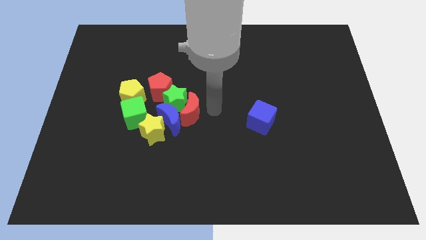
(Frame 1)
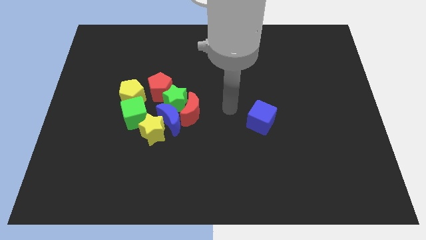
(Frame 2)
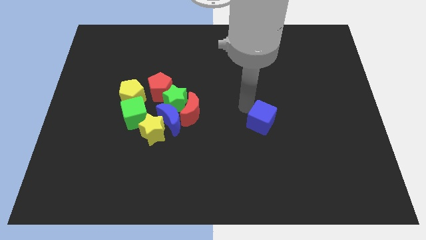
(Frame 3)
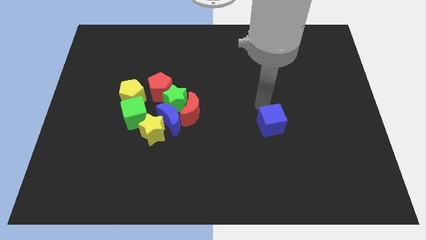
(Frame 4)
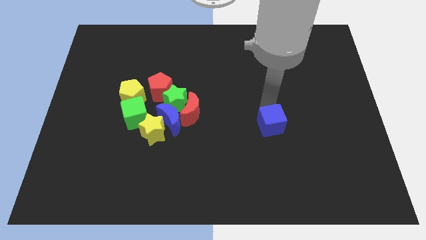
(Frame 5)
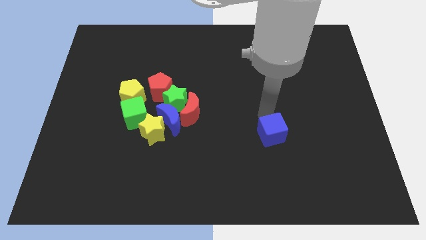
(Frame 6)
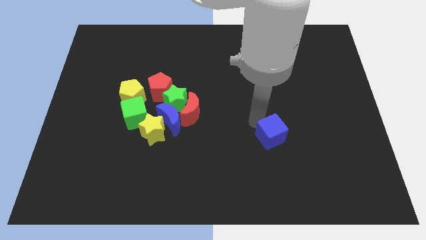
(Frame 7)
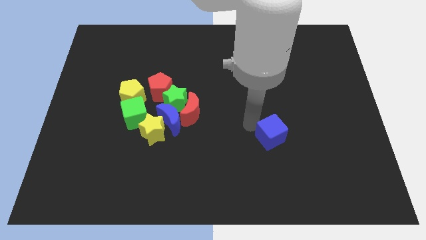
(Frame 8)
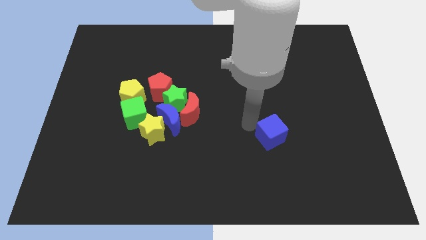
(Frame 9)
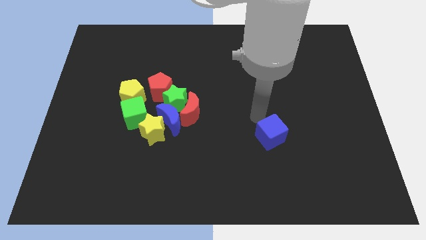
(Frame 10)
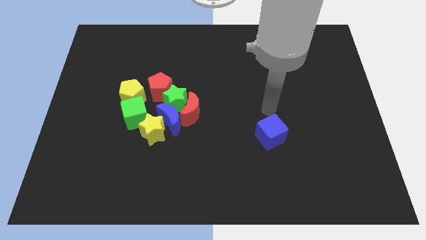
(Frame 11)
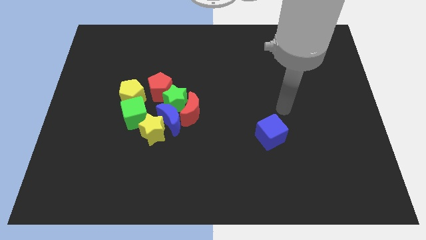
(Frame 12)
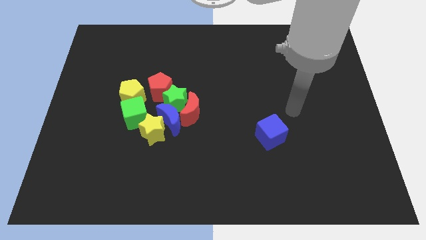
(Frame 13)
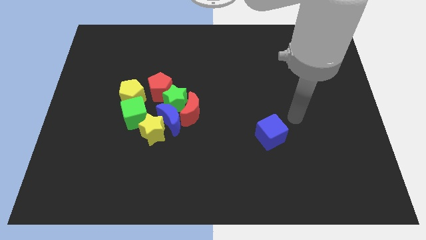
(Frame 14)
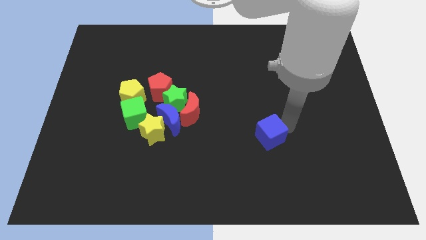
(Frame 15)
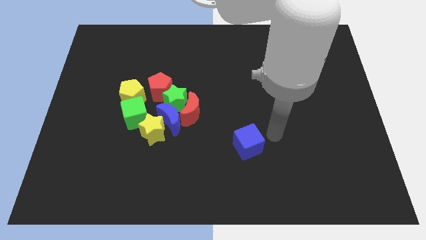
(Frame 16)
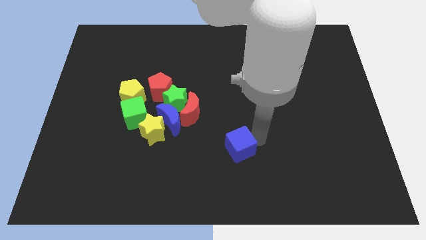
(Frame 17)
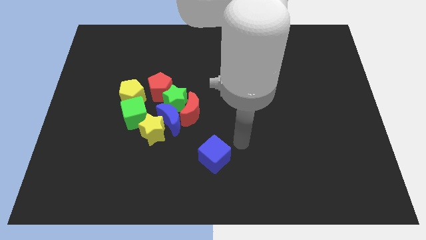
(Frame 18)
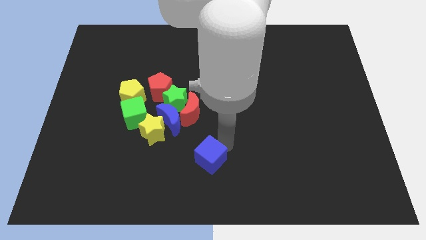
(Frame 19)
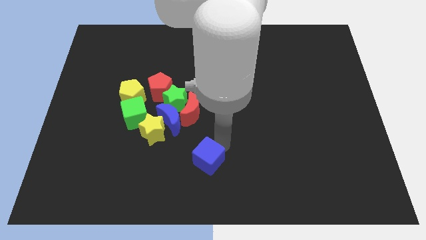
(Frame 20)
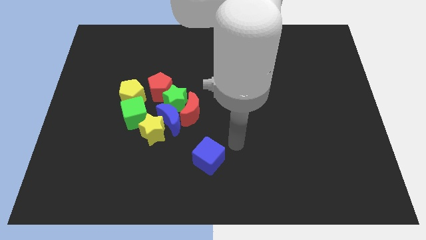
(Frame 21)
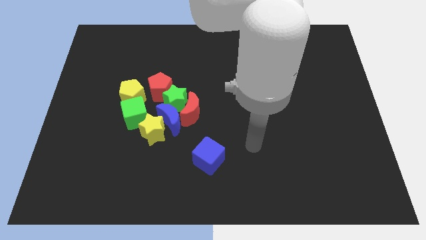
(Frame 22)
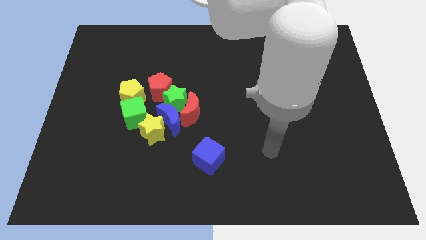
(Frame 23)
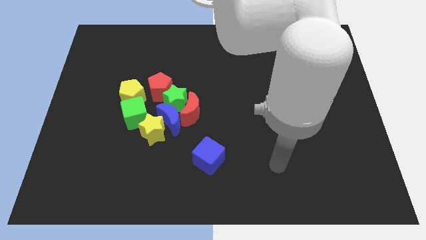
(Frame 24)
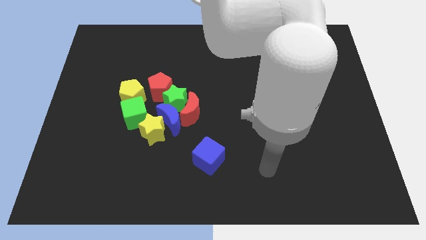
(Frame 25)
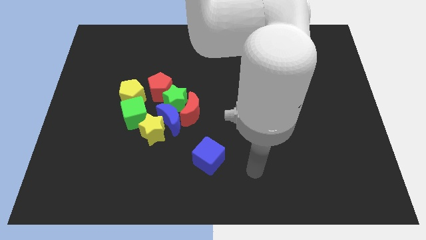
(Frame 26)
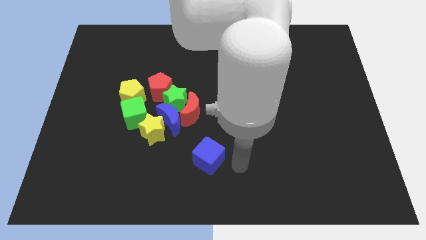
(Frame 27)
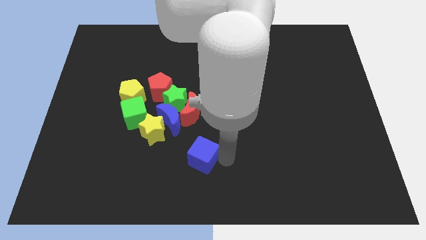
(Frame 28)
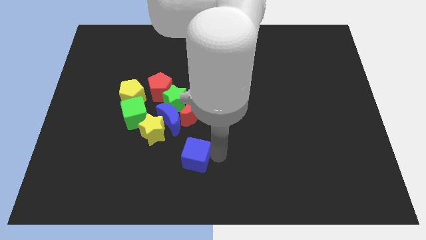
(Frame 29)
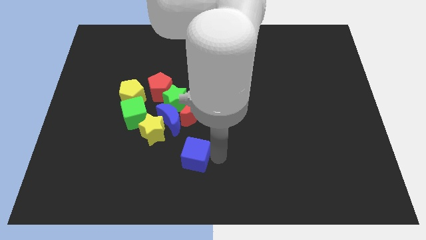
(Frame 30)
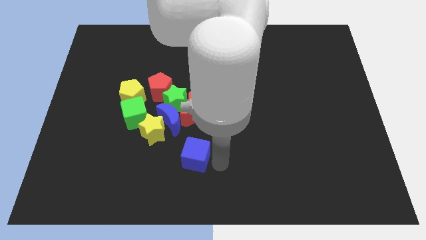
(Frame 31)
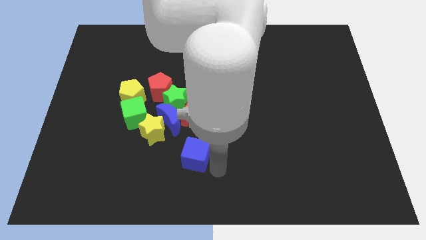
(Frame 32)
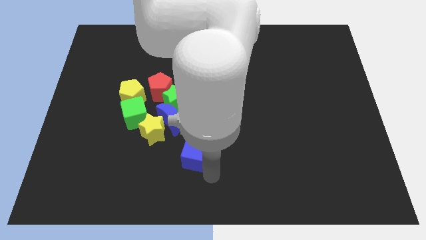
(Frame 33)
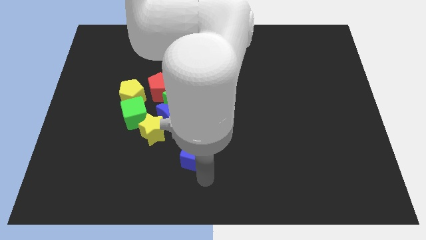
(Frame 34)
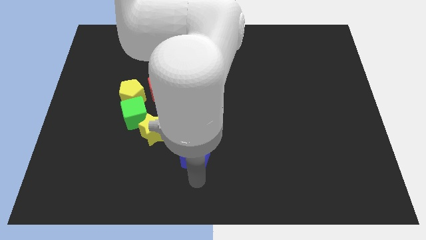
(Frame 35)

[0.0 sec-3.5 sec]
slide the blue cube towards the group of blocks

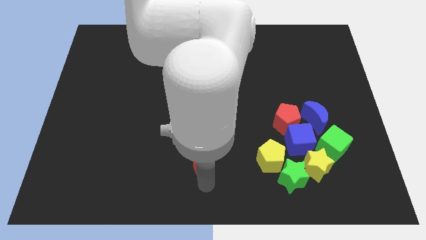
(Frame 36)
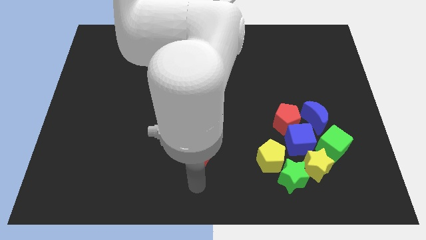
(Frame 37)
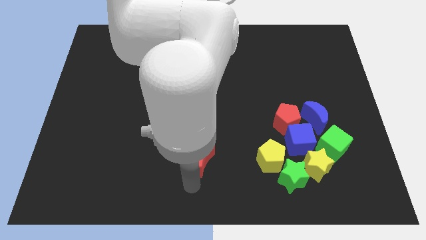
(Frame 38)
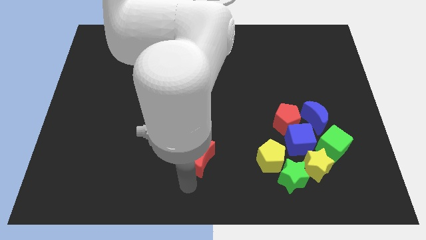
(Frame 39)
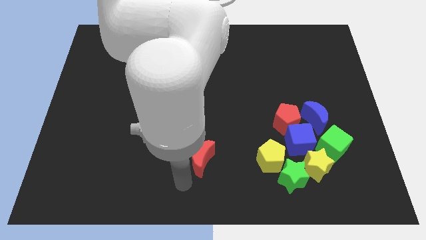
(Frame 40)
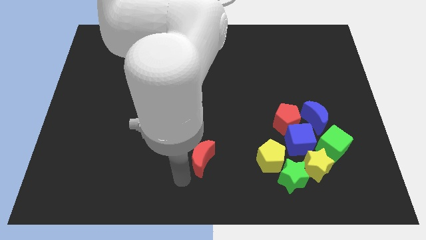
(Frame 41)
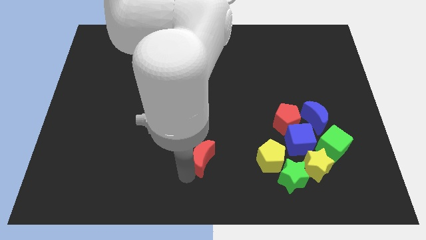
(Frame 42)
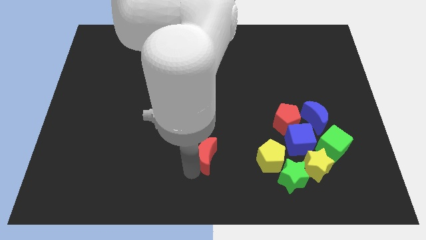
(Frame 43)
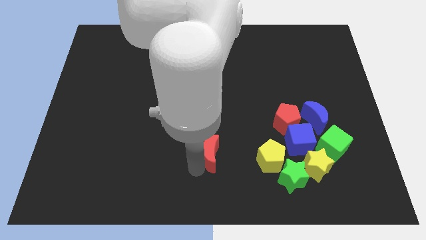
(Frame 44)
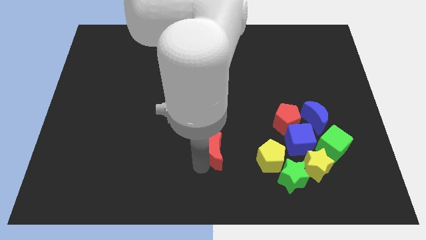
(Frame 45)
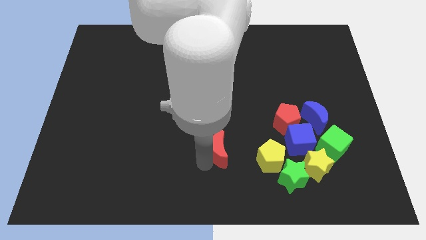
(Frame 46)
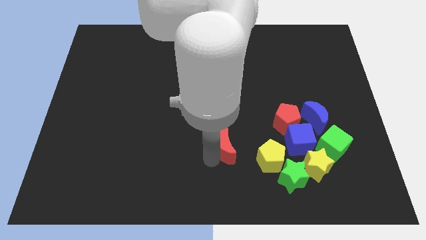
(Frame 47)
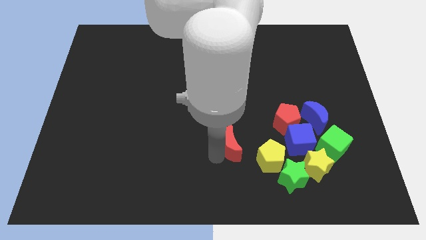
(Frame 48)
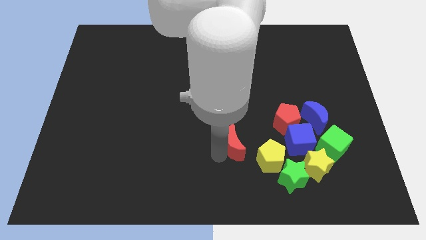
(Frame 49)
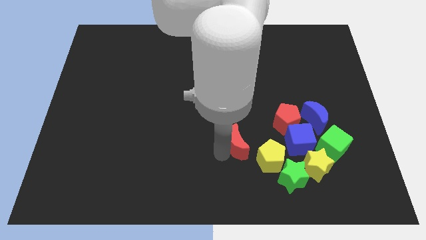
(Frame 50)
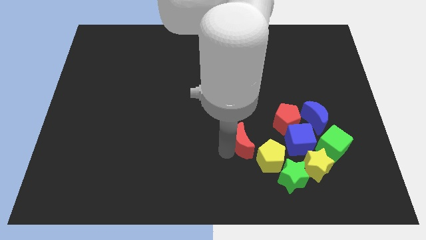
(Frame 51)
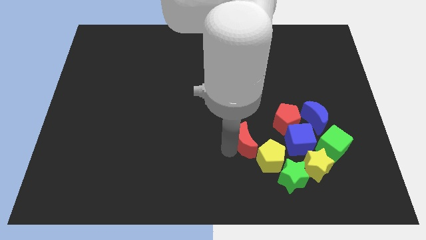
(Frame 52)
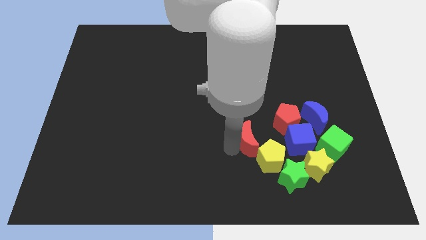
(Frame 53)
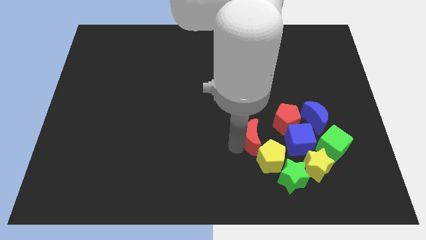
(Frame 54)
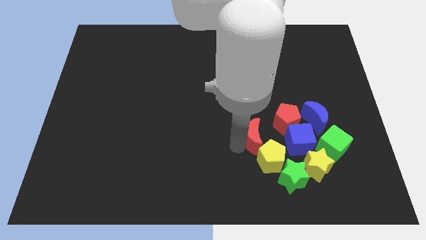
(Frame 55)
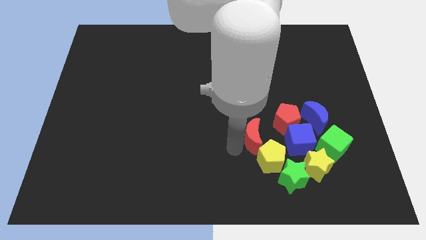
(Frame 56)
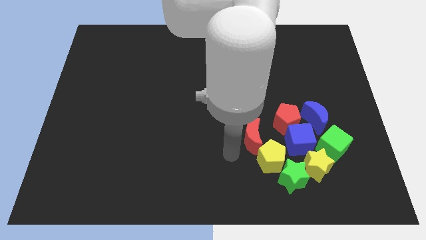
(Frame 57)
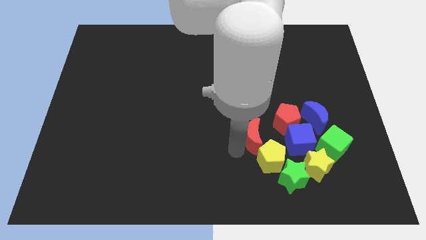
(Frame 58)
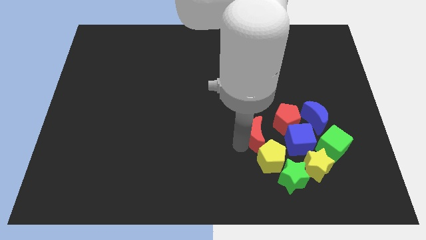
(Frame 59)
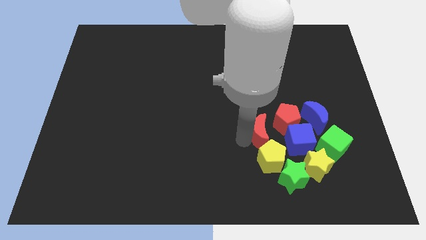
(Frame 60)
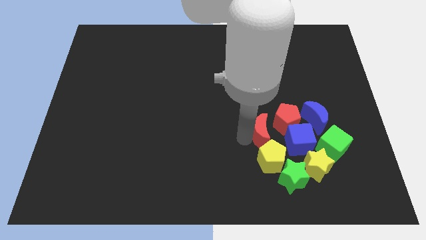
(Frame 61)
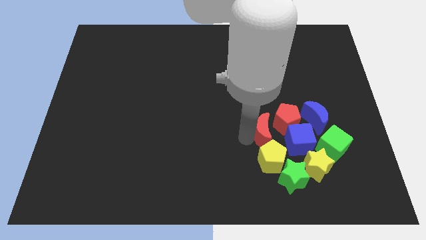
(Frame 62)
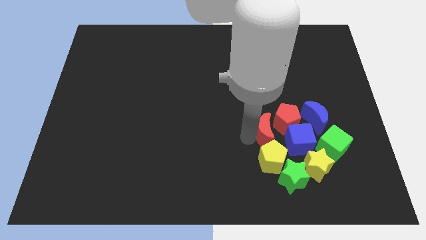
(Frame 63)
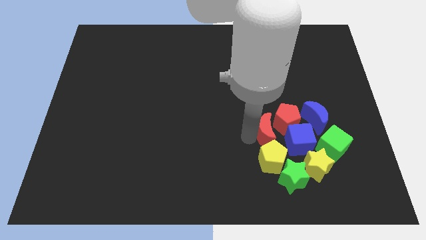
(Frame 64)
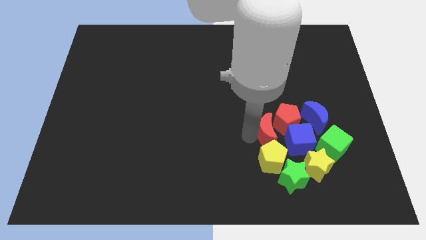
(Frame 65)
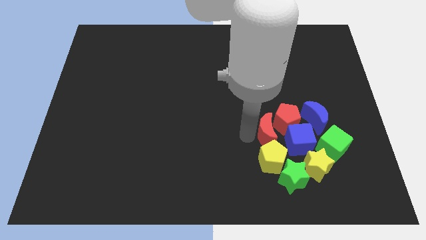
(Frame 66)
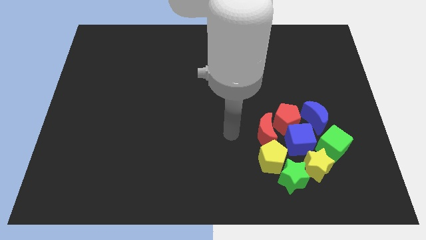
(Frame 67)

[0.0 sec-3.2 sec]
move the red moon to the top of yellow pentagon

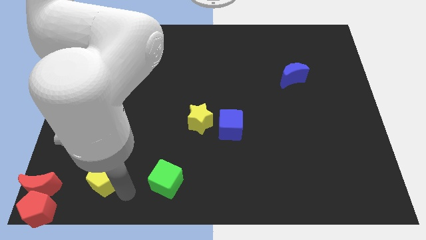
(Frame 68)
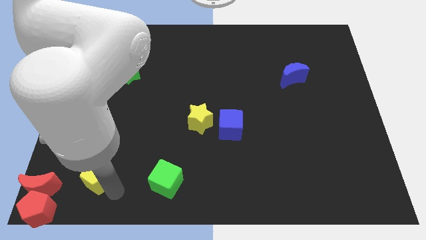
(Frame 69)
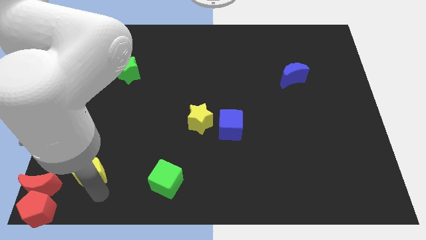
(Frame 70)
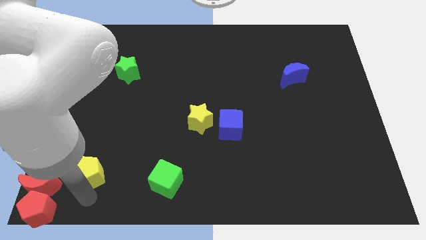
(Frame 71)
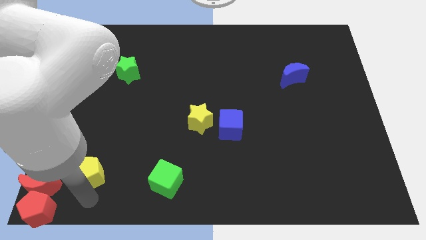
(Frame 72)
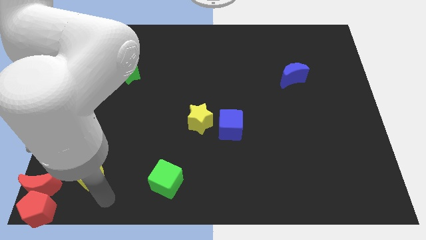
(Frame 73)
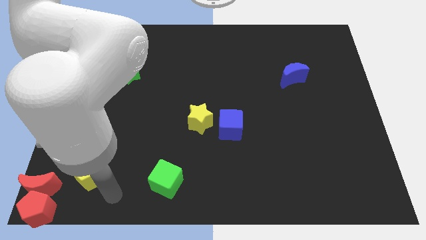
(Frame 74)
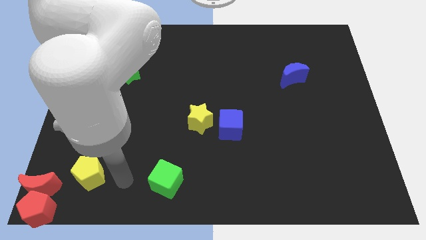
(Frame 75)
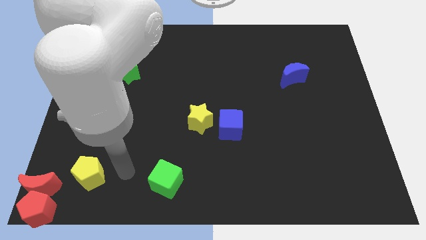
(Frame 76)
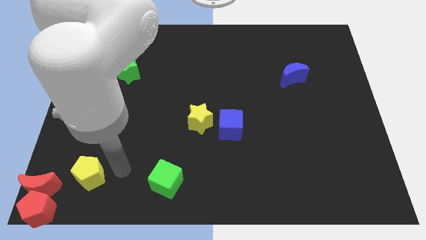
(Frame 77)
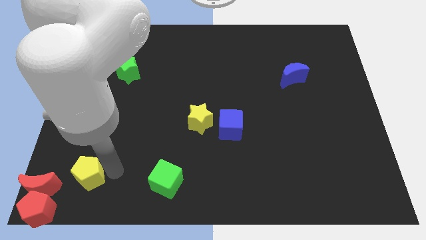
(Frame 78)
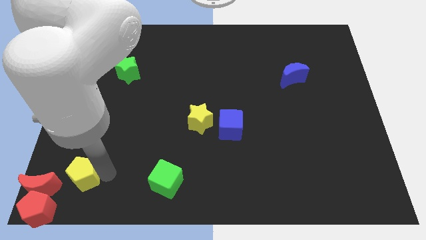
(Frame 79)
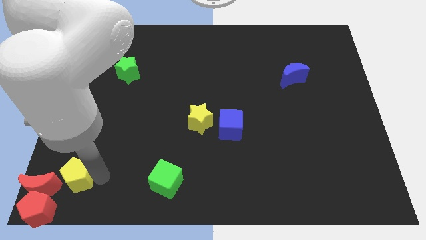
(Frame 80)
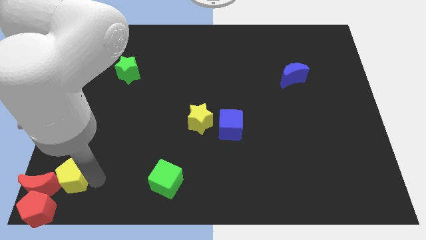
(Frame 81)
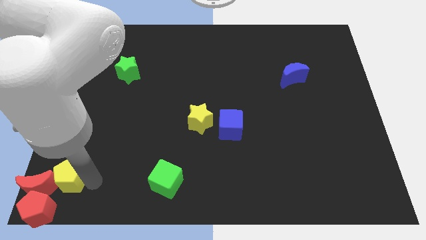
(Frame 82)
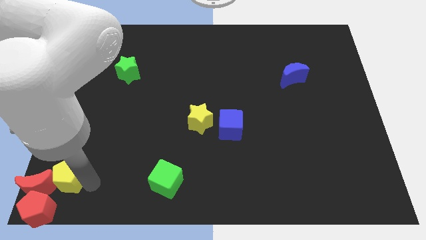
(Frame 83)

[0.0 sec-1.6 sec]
push the yellow pentagon into red moon

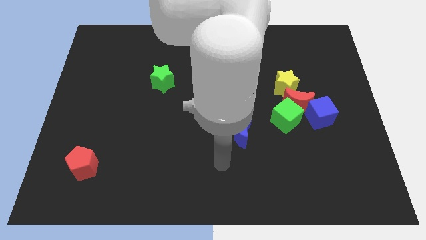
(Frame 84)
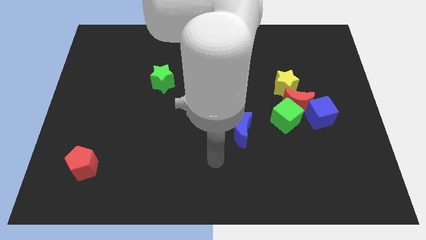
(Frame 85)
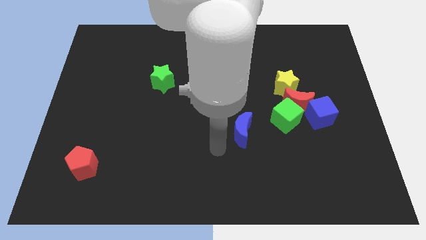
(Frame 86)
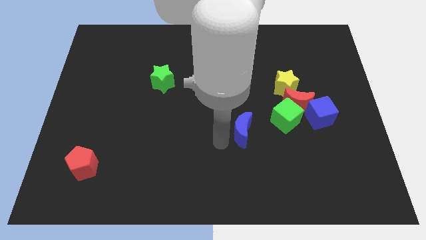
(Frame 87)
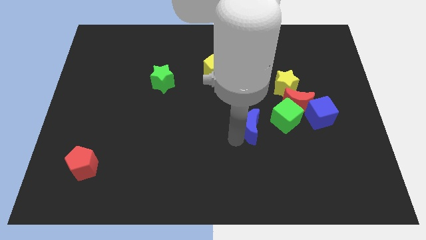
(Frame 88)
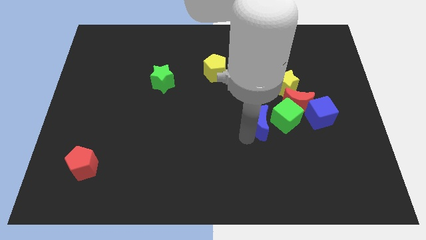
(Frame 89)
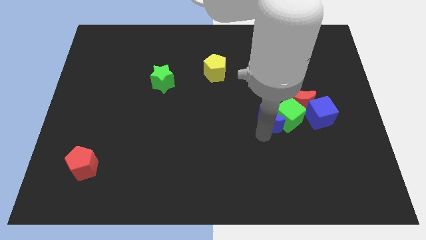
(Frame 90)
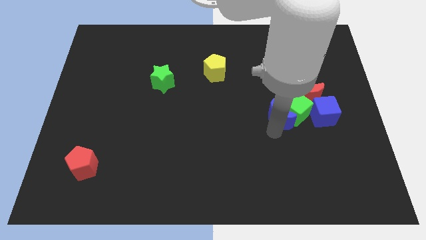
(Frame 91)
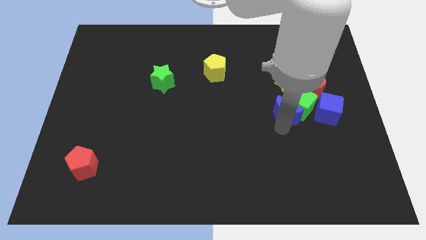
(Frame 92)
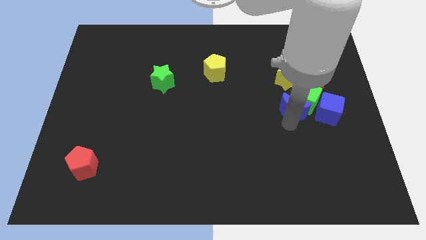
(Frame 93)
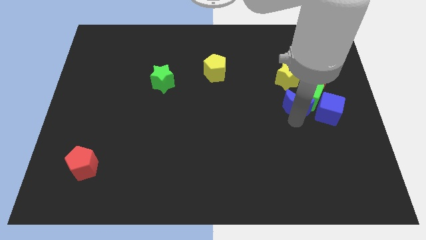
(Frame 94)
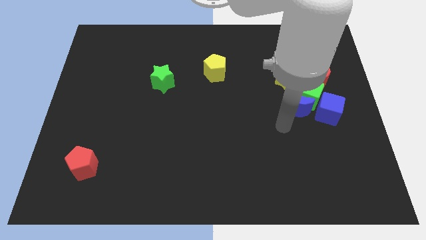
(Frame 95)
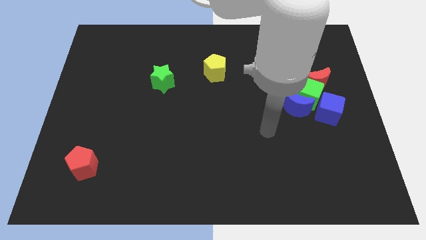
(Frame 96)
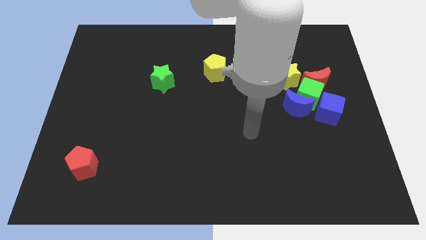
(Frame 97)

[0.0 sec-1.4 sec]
push the blue moon into the green cube
